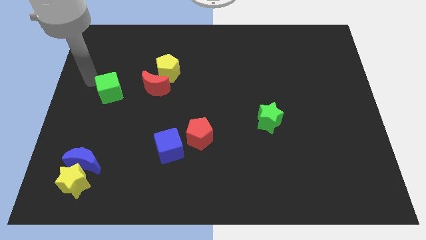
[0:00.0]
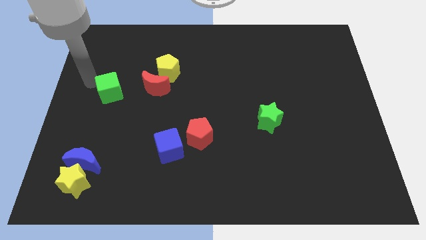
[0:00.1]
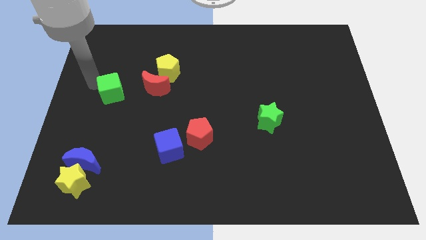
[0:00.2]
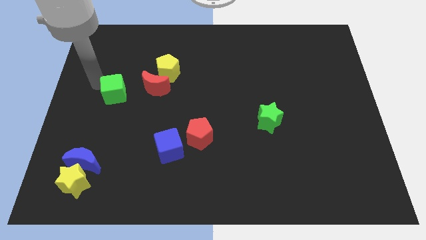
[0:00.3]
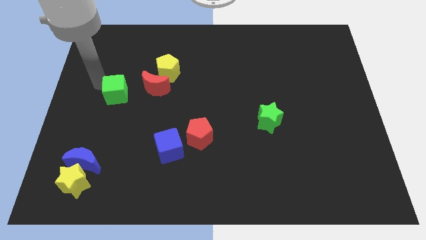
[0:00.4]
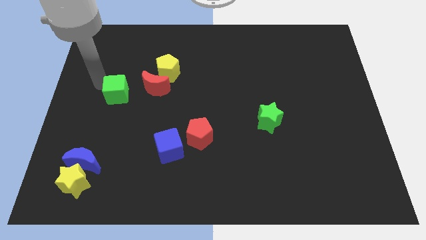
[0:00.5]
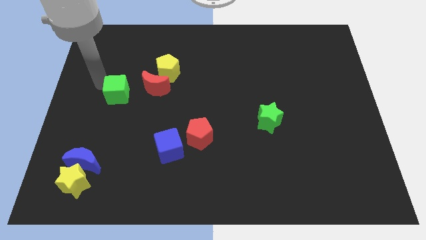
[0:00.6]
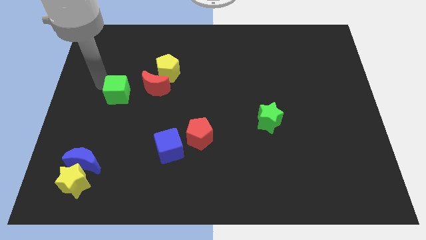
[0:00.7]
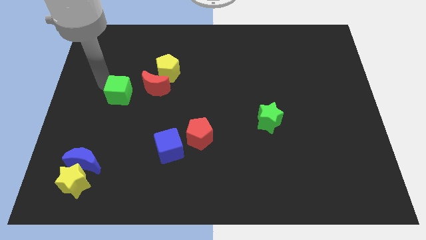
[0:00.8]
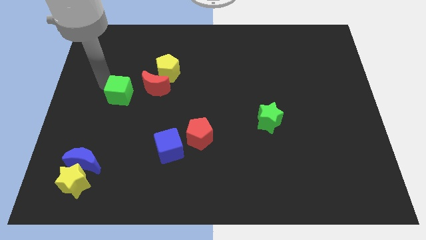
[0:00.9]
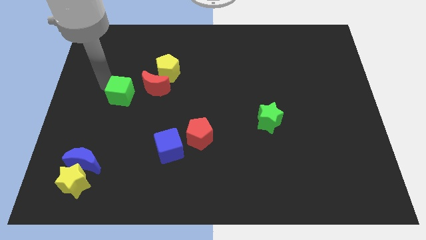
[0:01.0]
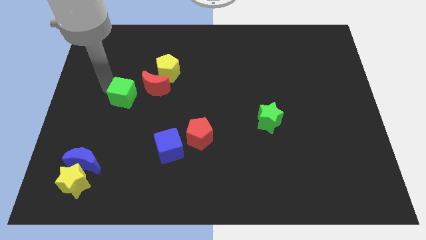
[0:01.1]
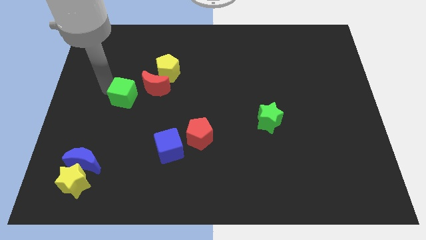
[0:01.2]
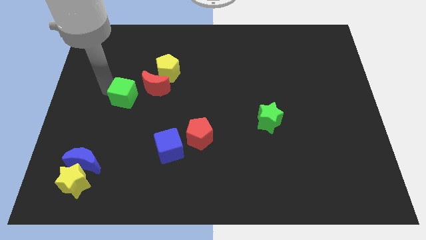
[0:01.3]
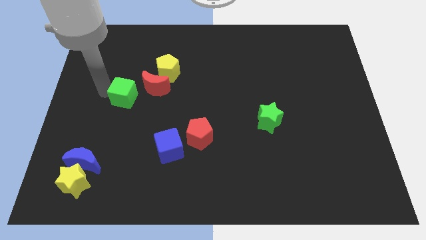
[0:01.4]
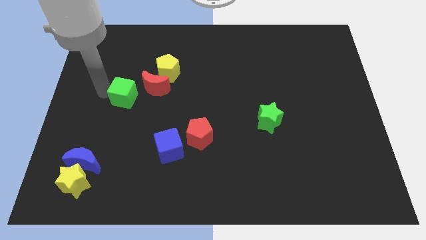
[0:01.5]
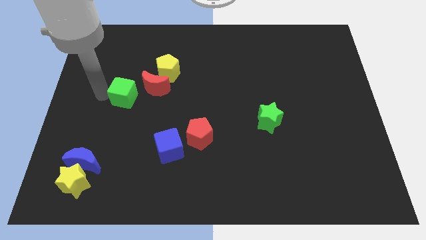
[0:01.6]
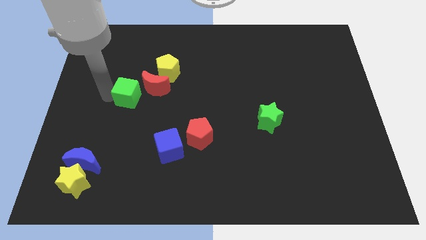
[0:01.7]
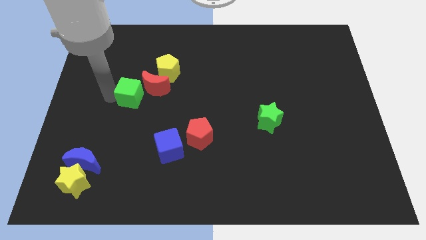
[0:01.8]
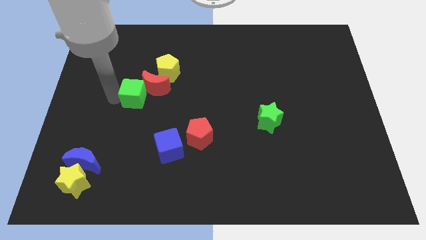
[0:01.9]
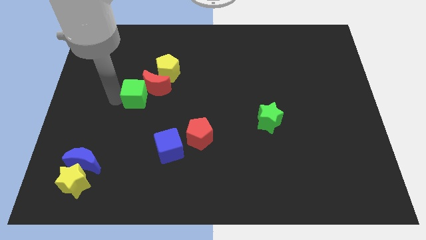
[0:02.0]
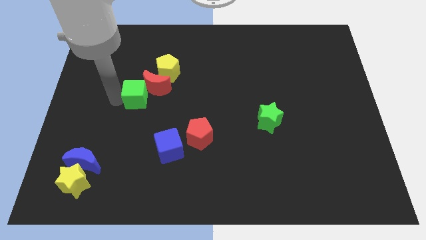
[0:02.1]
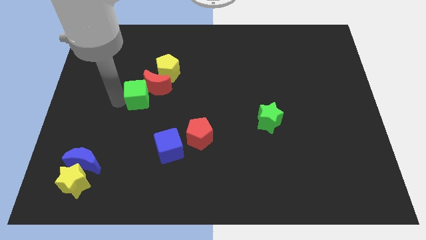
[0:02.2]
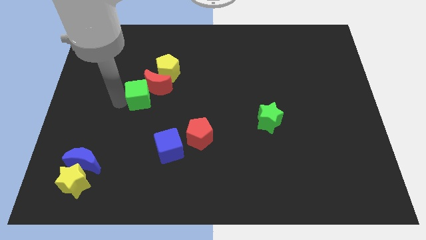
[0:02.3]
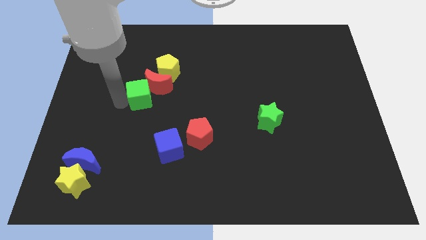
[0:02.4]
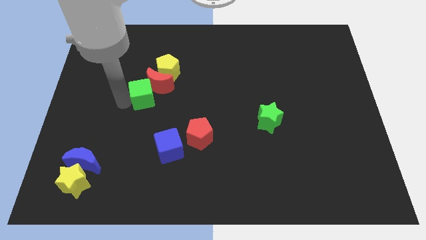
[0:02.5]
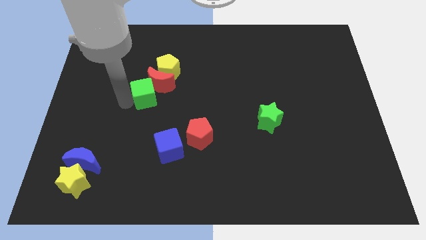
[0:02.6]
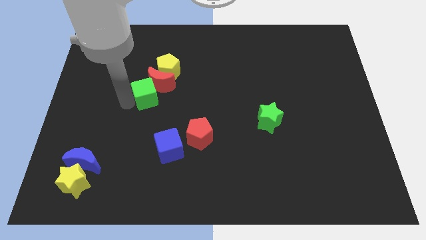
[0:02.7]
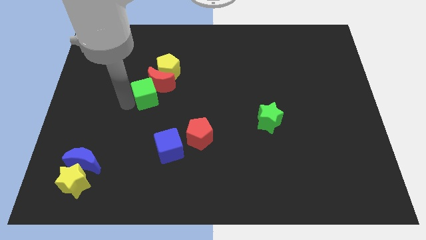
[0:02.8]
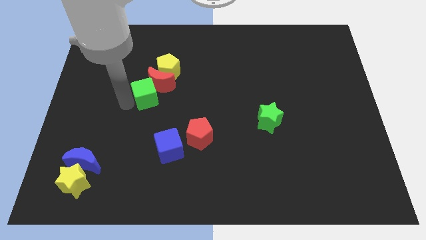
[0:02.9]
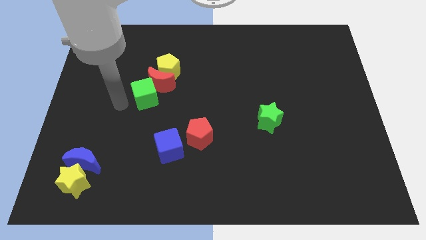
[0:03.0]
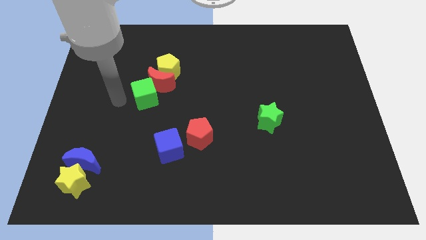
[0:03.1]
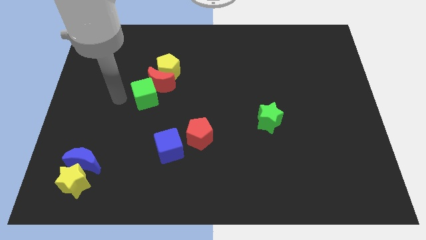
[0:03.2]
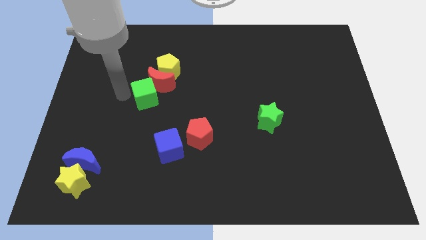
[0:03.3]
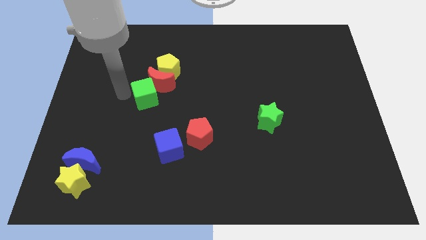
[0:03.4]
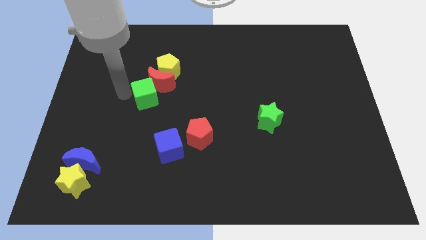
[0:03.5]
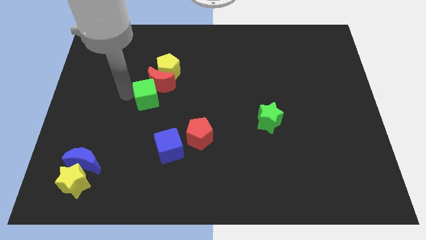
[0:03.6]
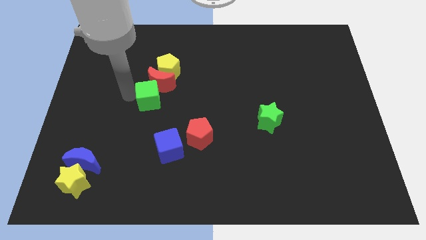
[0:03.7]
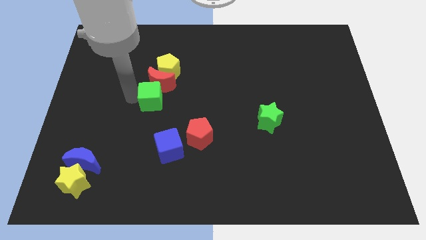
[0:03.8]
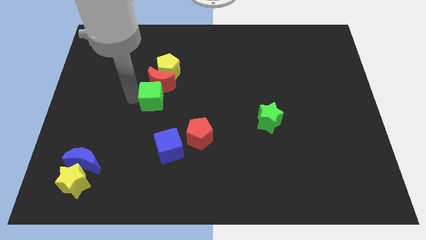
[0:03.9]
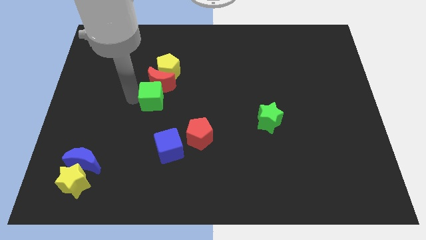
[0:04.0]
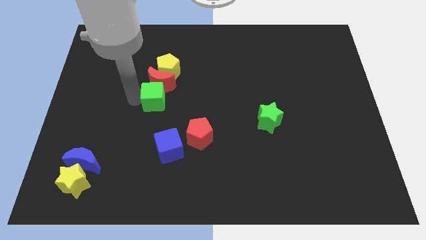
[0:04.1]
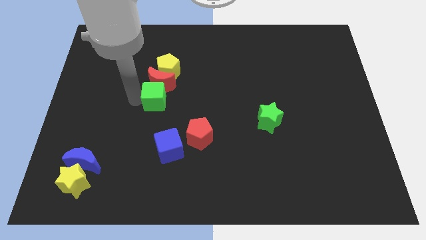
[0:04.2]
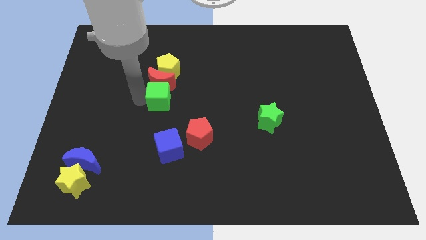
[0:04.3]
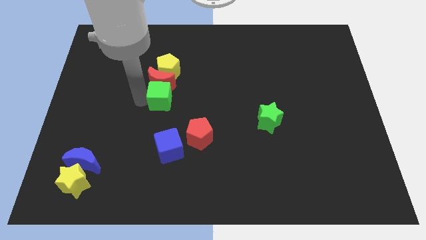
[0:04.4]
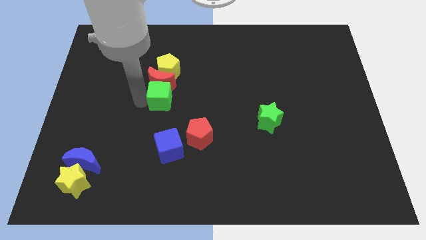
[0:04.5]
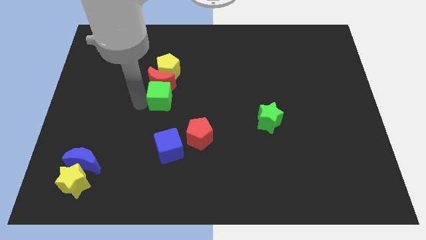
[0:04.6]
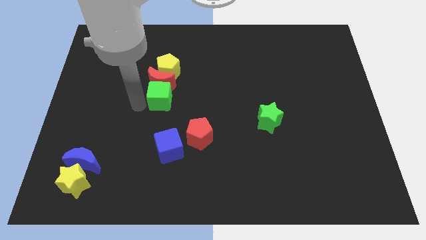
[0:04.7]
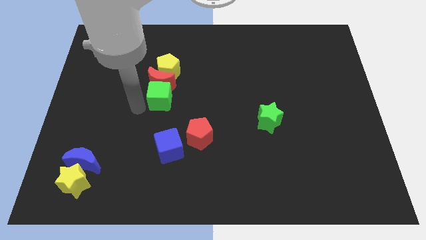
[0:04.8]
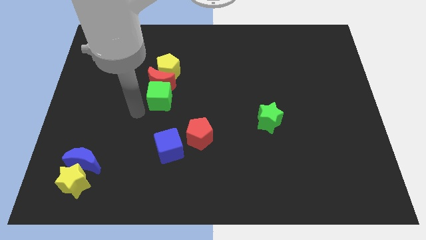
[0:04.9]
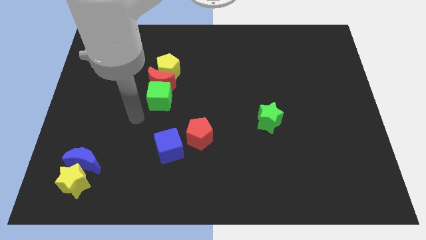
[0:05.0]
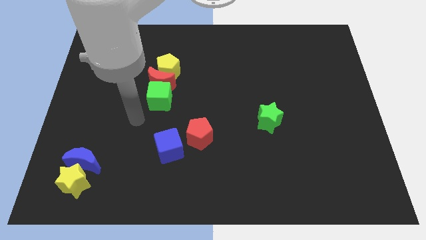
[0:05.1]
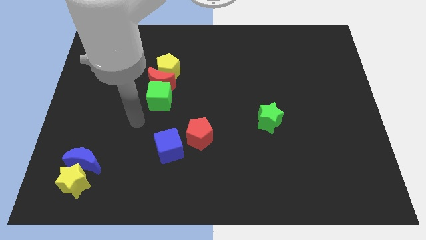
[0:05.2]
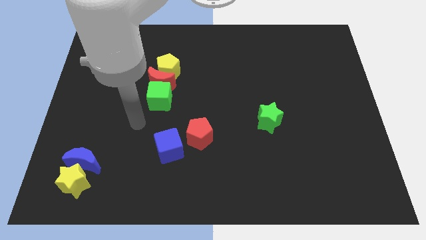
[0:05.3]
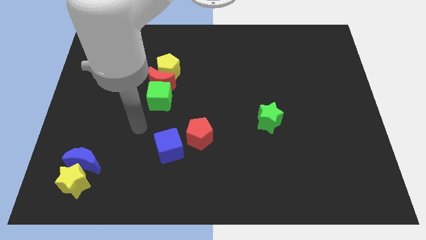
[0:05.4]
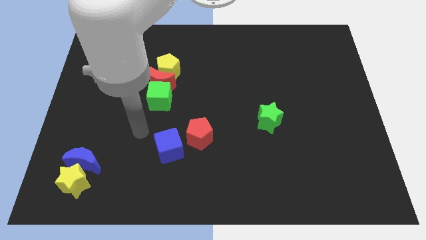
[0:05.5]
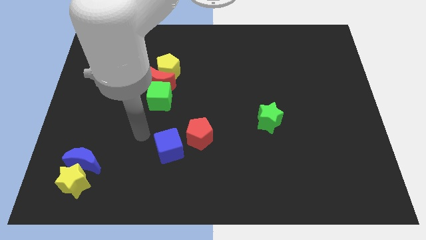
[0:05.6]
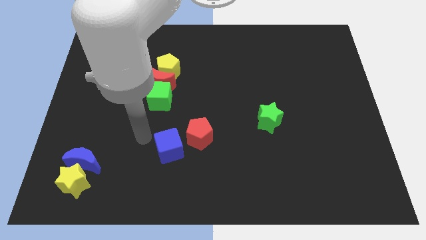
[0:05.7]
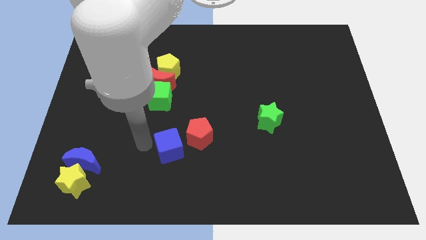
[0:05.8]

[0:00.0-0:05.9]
put the green cube below the red moon

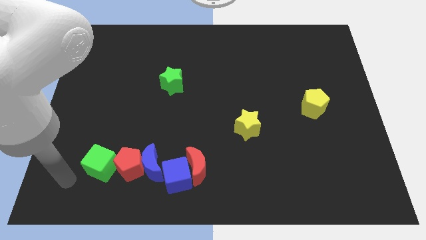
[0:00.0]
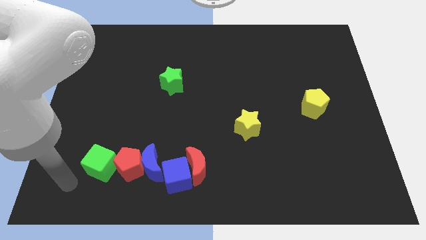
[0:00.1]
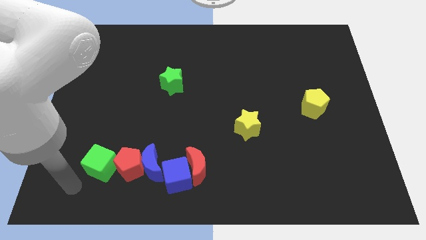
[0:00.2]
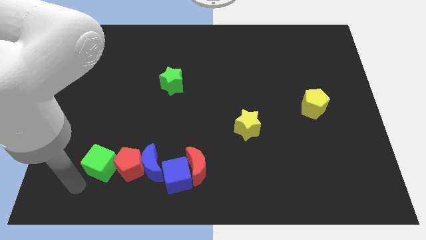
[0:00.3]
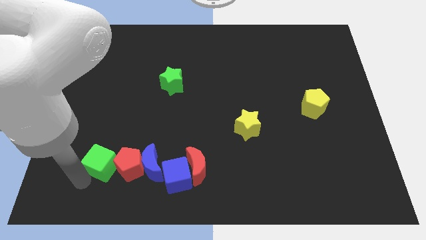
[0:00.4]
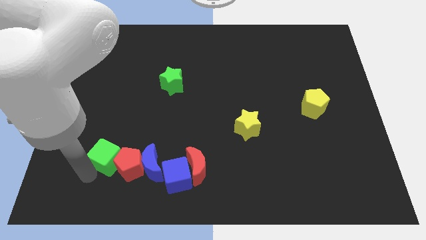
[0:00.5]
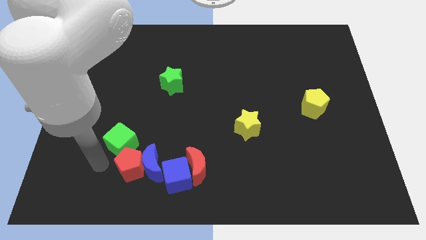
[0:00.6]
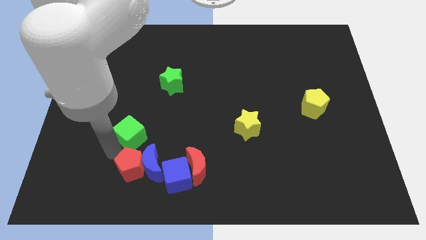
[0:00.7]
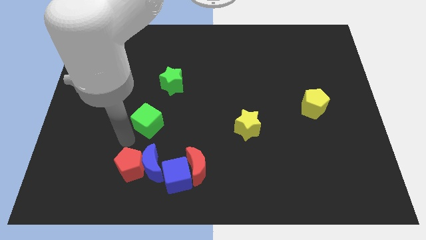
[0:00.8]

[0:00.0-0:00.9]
push green cube below blue crescent

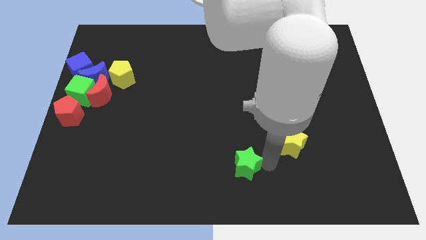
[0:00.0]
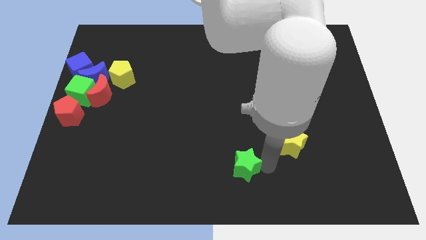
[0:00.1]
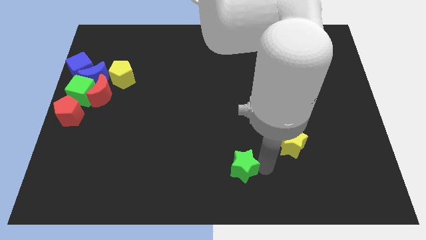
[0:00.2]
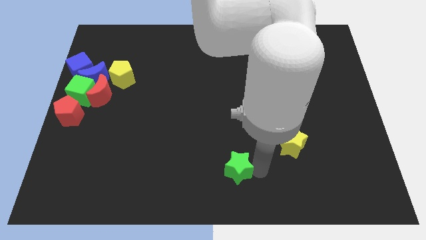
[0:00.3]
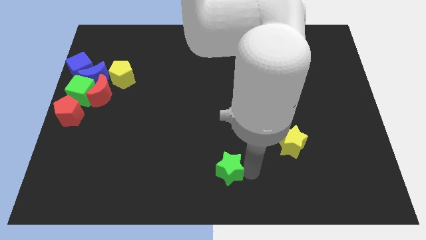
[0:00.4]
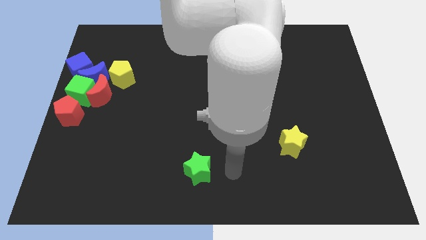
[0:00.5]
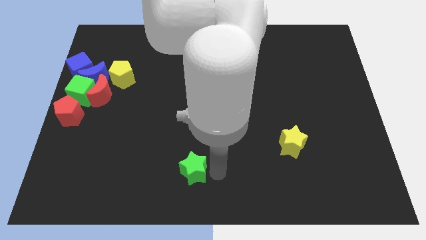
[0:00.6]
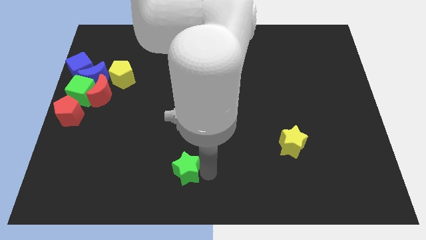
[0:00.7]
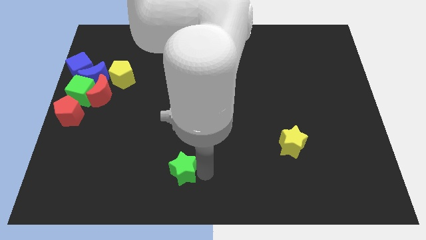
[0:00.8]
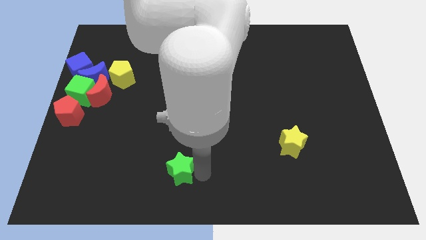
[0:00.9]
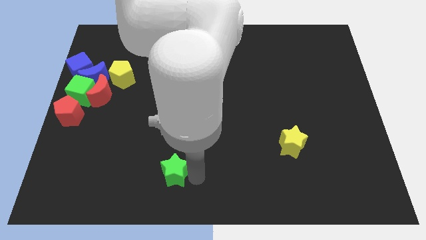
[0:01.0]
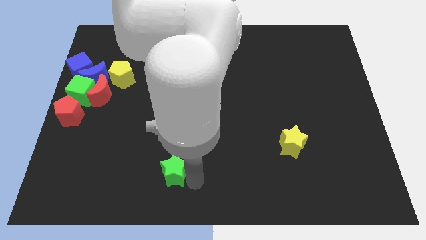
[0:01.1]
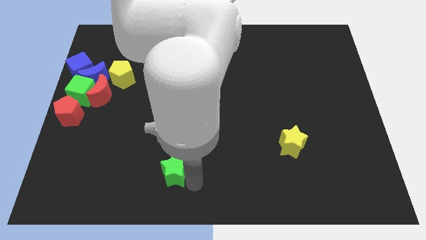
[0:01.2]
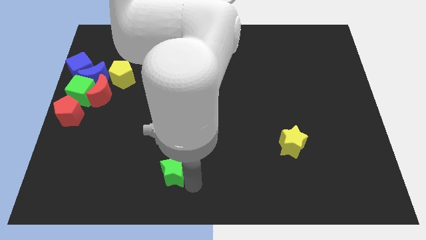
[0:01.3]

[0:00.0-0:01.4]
push the green star towards left

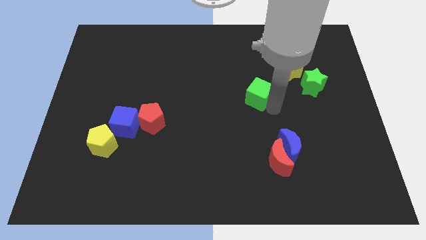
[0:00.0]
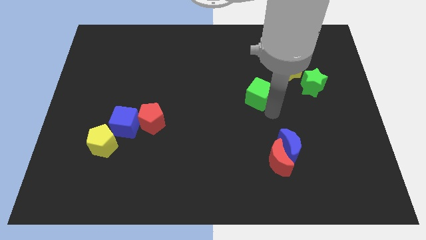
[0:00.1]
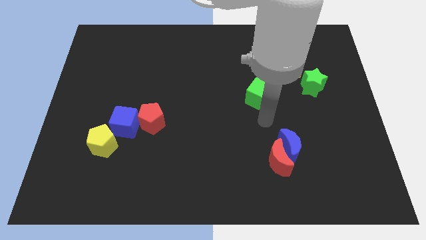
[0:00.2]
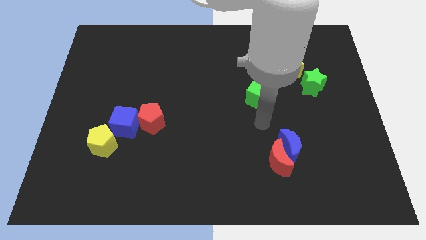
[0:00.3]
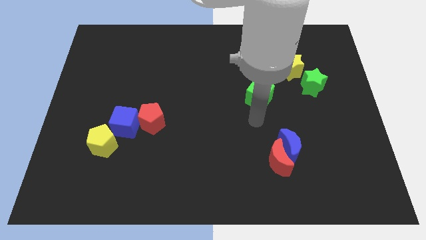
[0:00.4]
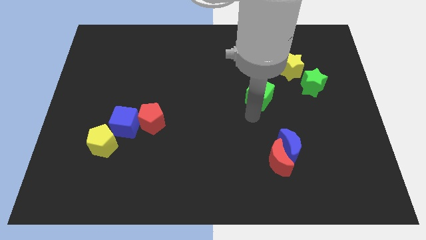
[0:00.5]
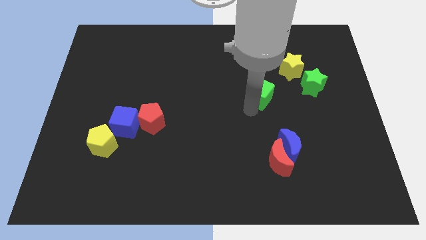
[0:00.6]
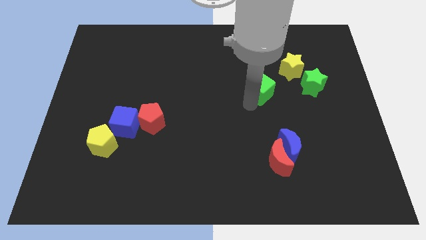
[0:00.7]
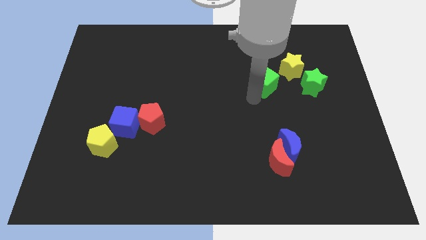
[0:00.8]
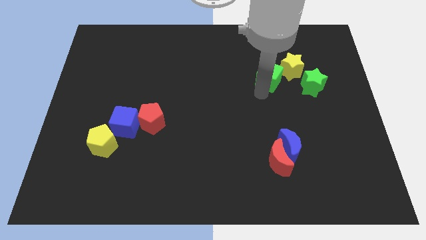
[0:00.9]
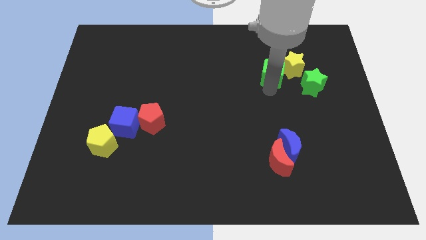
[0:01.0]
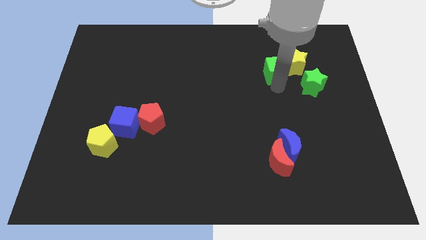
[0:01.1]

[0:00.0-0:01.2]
make the green cube touch the left side of the yellow star
